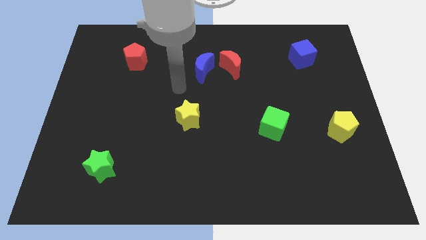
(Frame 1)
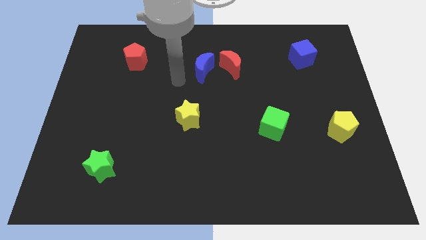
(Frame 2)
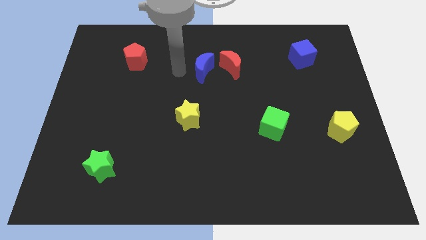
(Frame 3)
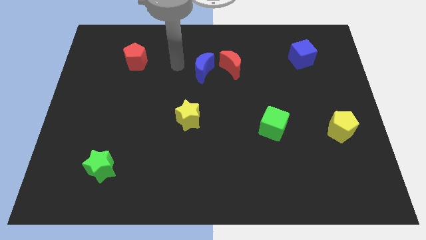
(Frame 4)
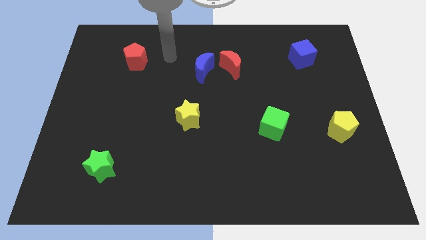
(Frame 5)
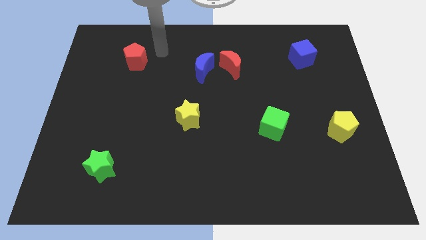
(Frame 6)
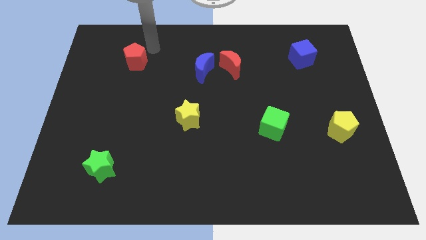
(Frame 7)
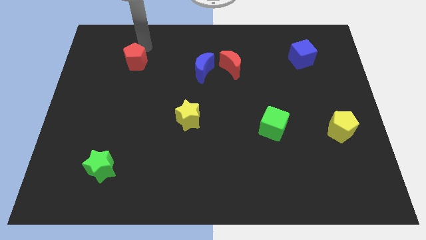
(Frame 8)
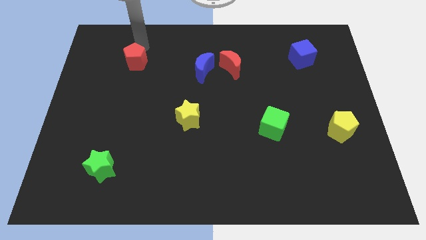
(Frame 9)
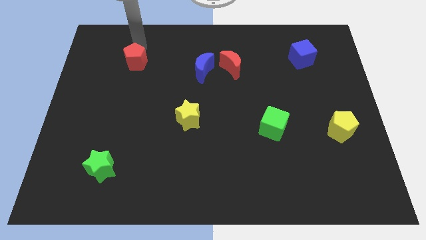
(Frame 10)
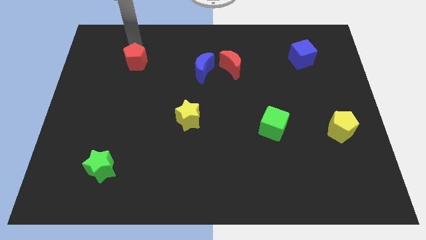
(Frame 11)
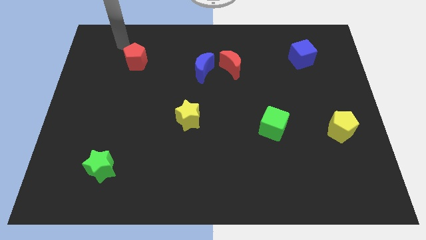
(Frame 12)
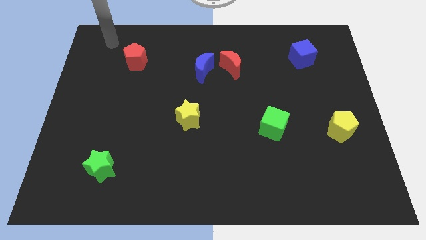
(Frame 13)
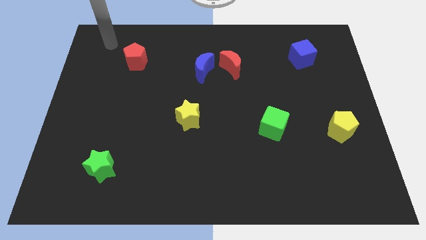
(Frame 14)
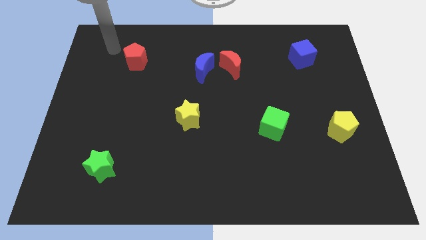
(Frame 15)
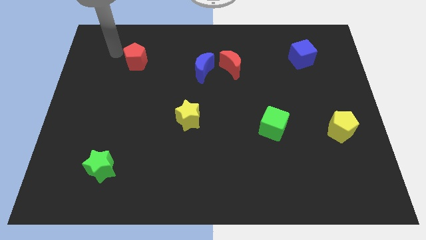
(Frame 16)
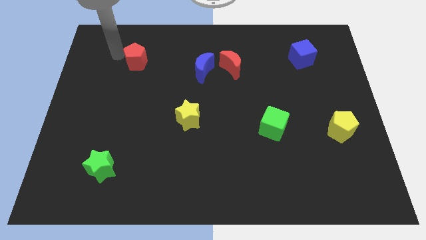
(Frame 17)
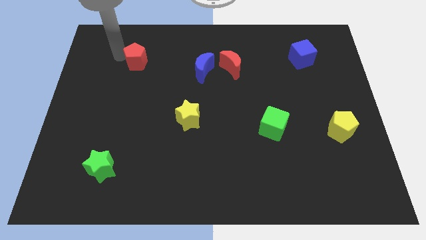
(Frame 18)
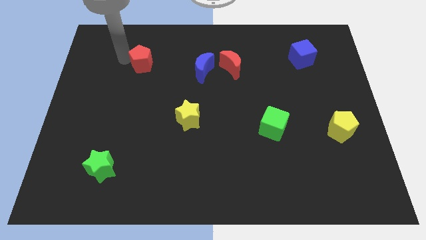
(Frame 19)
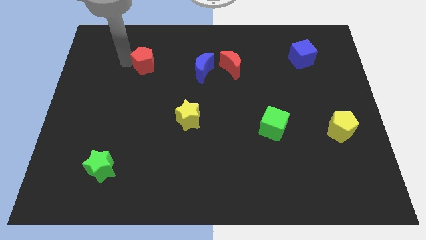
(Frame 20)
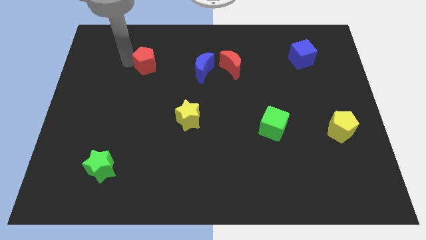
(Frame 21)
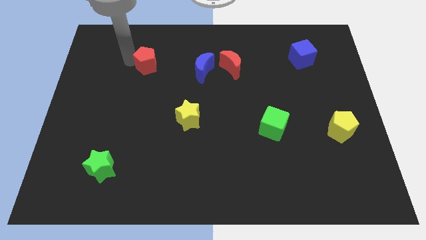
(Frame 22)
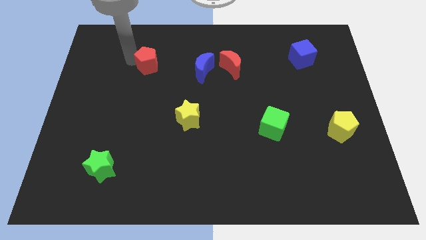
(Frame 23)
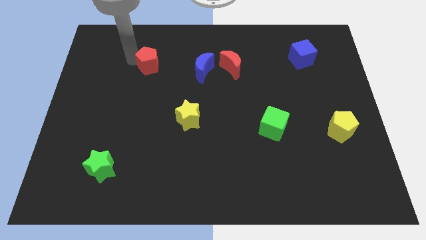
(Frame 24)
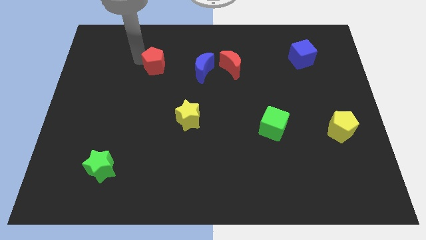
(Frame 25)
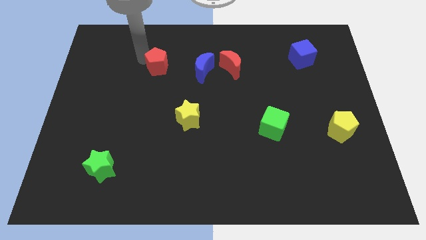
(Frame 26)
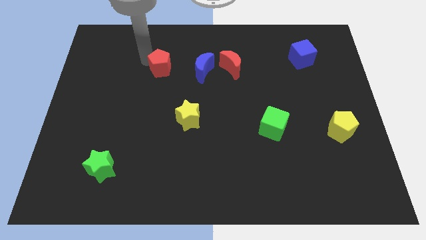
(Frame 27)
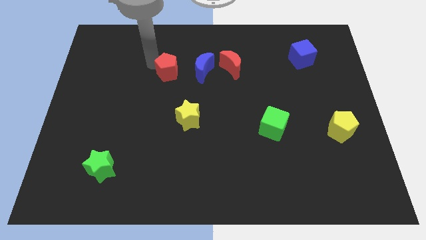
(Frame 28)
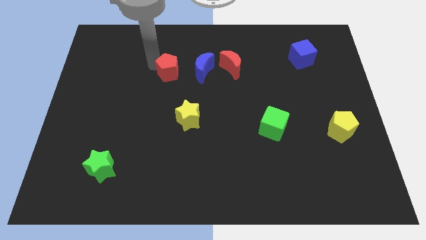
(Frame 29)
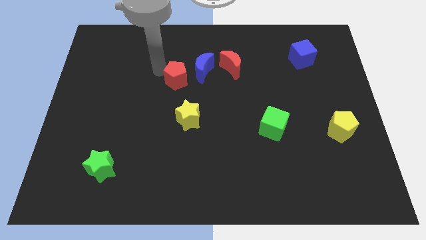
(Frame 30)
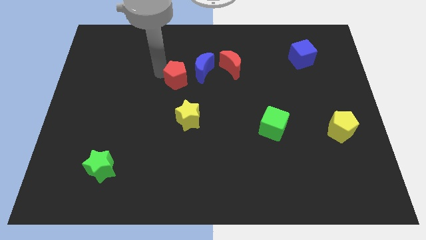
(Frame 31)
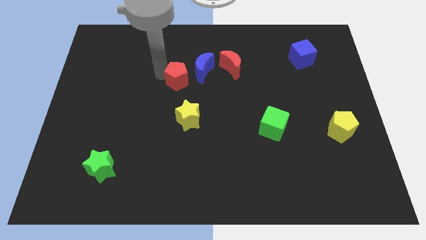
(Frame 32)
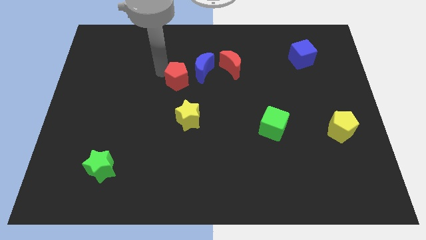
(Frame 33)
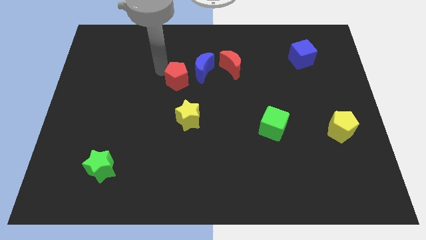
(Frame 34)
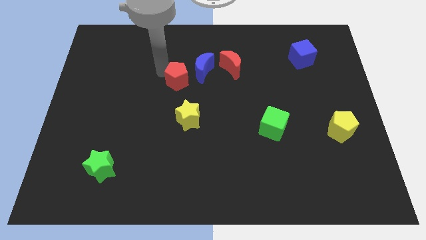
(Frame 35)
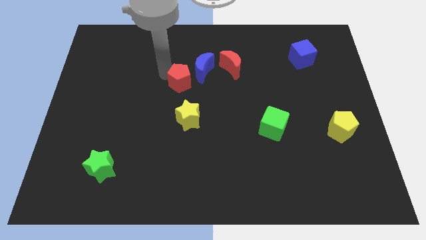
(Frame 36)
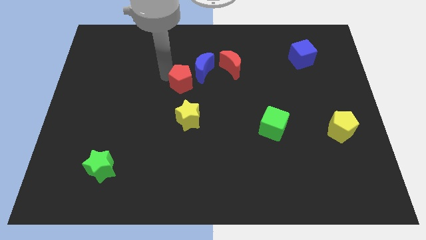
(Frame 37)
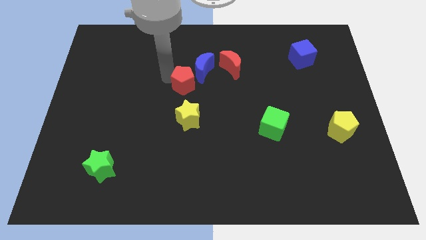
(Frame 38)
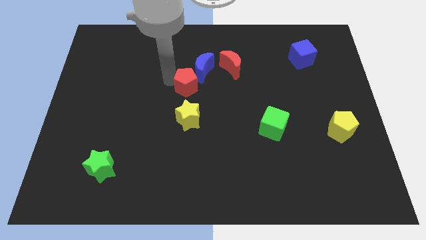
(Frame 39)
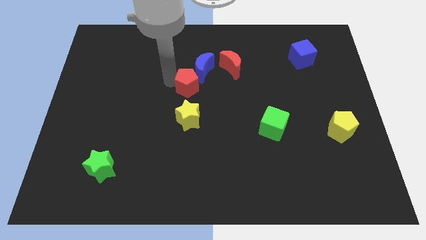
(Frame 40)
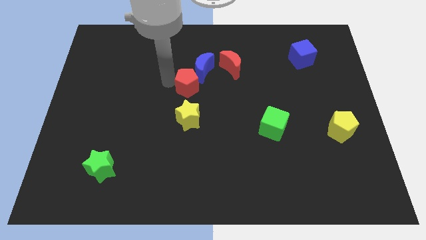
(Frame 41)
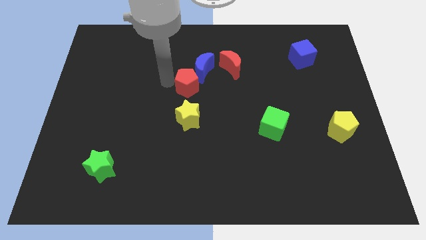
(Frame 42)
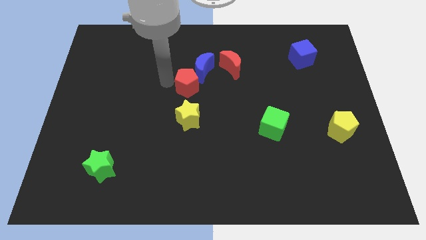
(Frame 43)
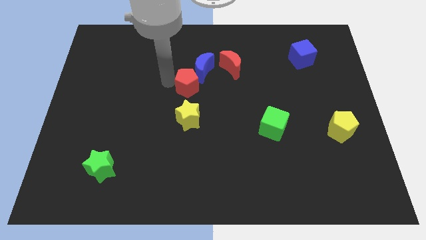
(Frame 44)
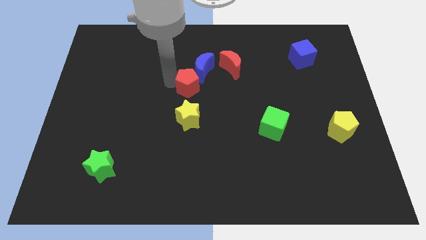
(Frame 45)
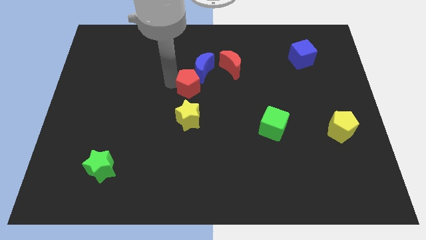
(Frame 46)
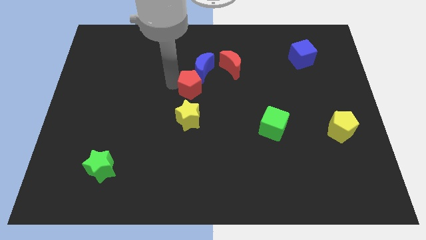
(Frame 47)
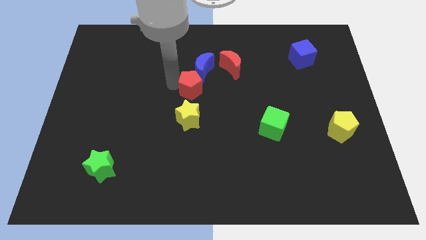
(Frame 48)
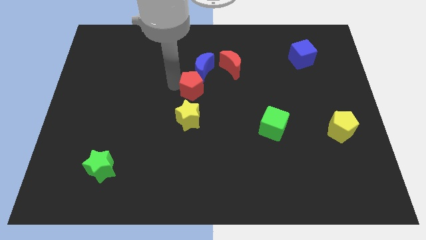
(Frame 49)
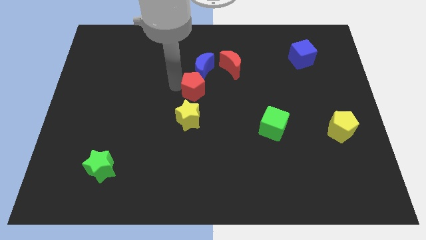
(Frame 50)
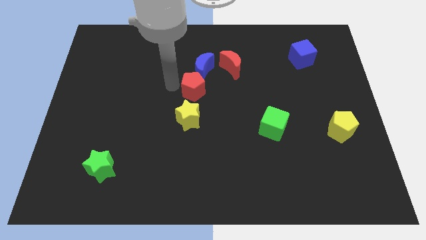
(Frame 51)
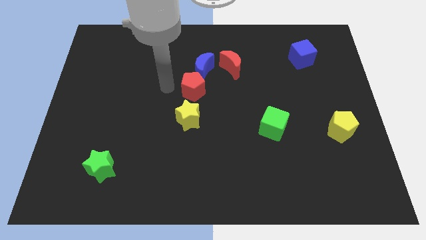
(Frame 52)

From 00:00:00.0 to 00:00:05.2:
place the red pentagon in between the blue crescent and yellow star

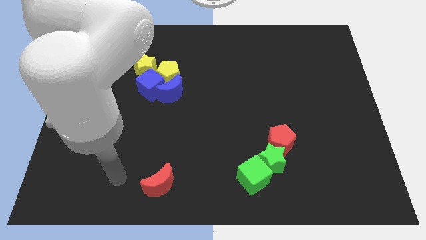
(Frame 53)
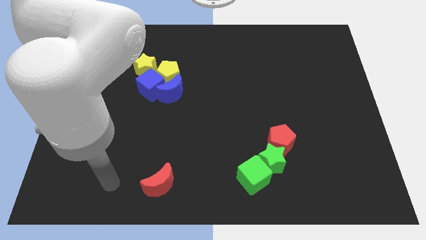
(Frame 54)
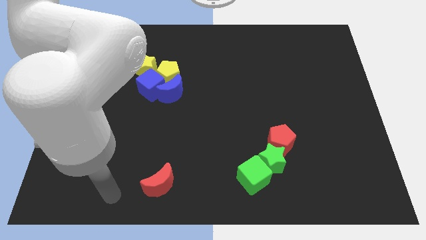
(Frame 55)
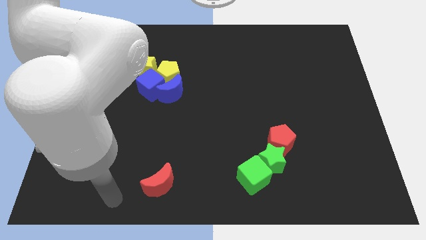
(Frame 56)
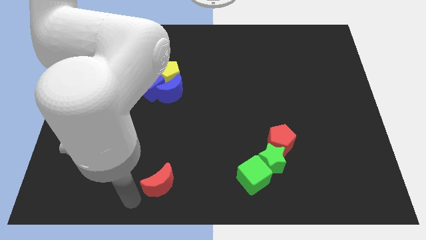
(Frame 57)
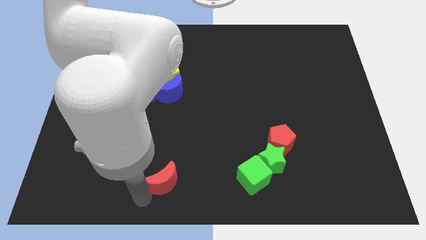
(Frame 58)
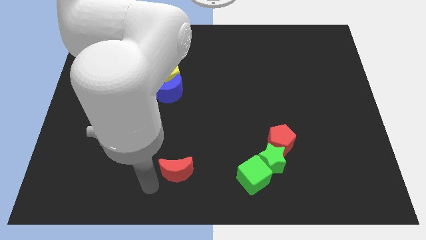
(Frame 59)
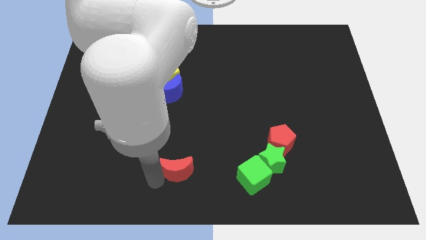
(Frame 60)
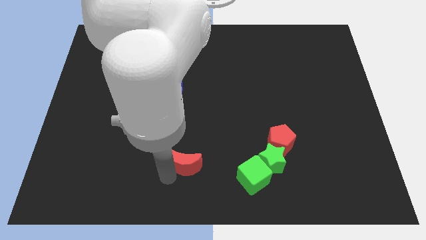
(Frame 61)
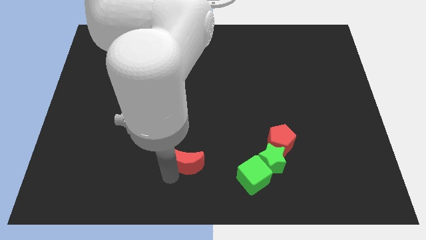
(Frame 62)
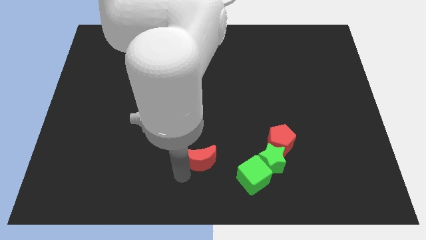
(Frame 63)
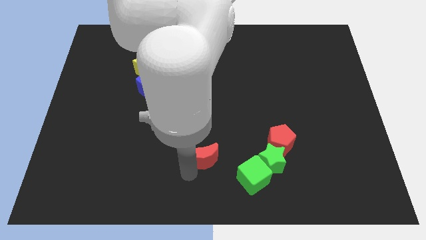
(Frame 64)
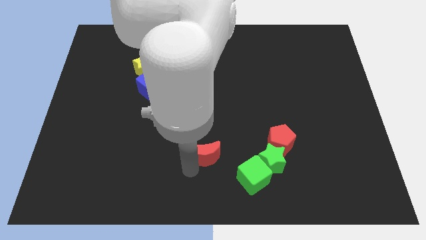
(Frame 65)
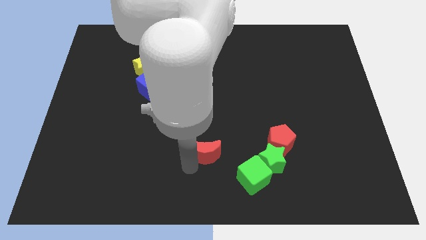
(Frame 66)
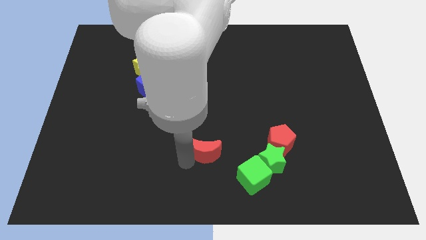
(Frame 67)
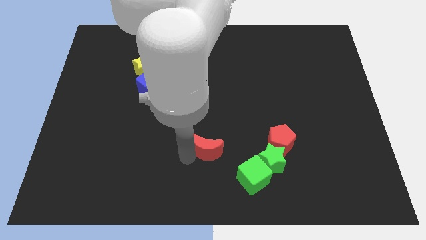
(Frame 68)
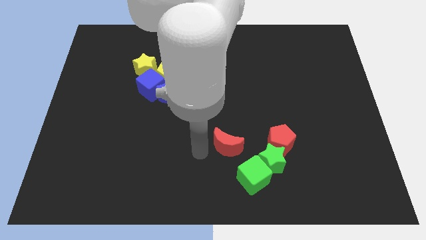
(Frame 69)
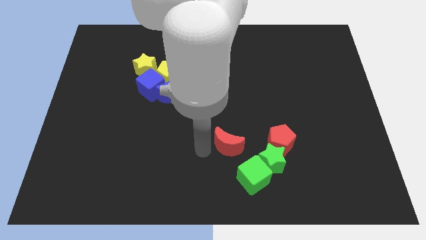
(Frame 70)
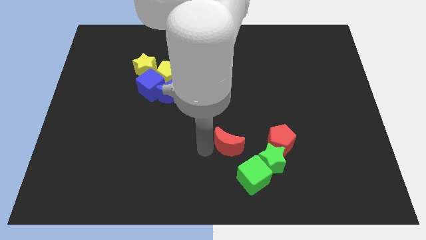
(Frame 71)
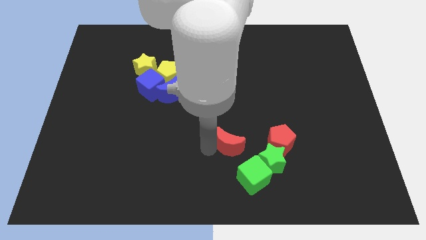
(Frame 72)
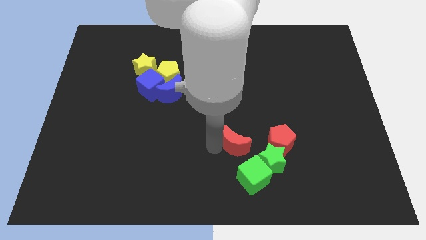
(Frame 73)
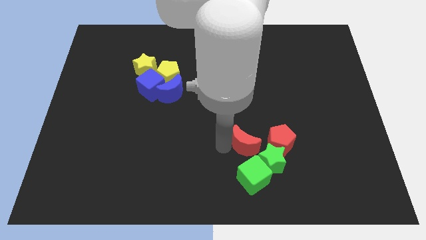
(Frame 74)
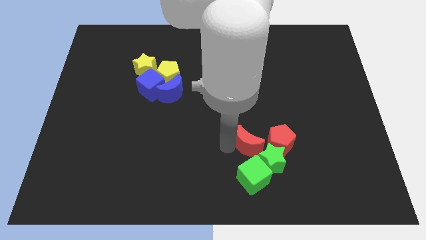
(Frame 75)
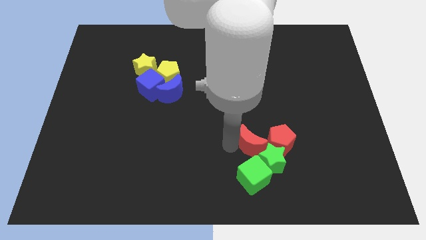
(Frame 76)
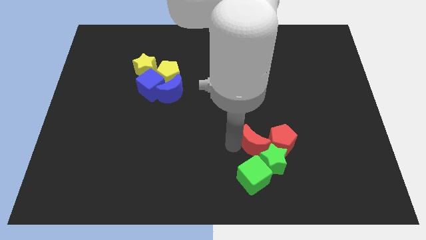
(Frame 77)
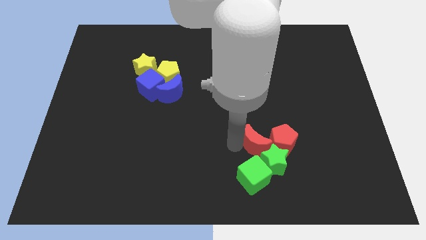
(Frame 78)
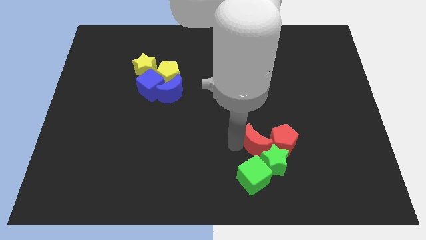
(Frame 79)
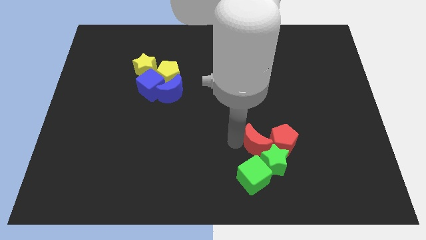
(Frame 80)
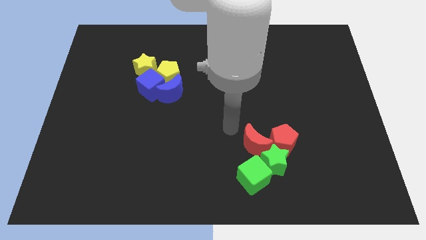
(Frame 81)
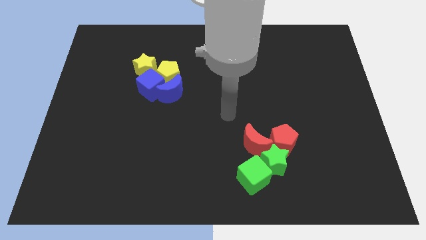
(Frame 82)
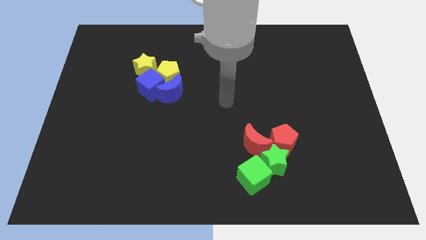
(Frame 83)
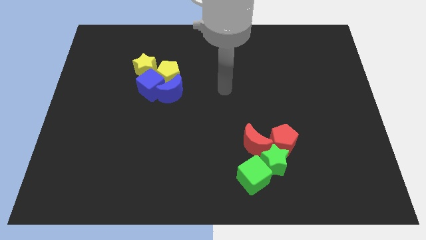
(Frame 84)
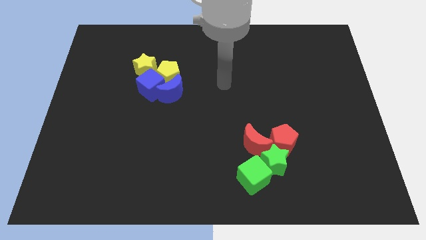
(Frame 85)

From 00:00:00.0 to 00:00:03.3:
slide the red crescent into the group of blocks

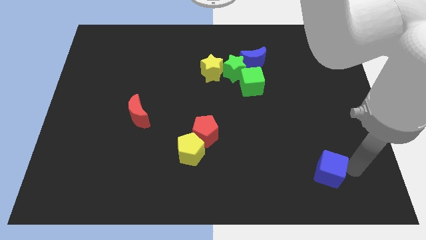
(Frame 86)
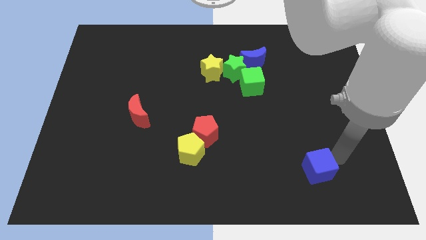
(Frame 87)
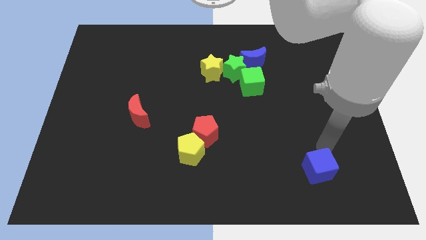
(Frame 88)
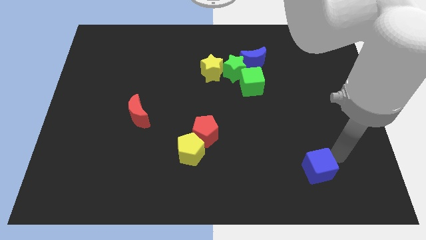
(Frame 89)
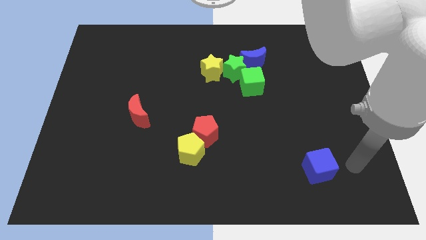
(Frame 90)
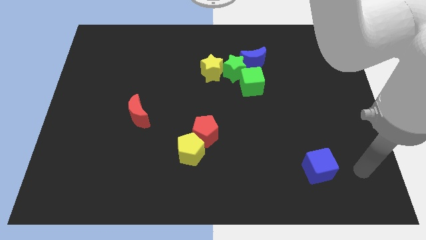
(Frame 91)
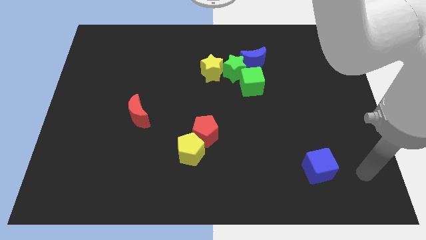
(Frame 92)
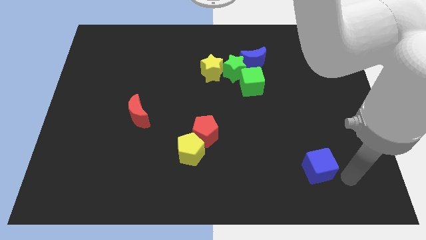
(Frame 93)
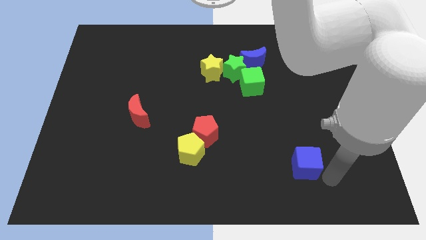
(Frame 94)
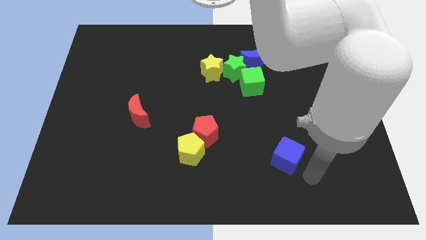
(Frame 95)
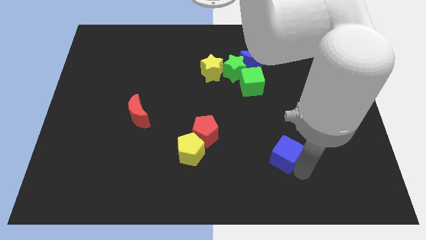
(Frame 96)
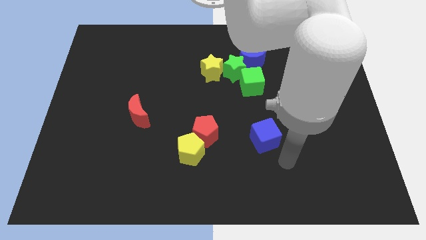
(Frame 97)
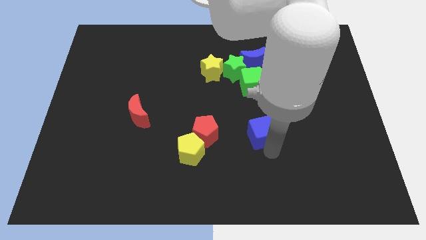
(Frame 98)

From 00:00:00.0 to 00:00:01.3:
push blue cube below green cube
